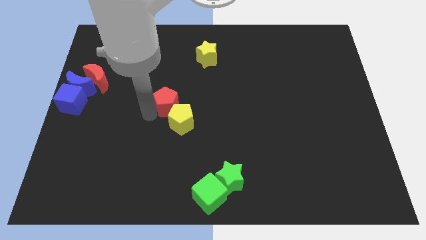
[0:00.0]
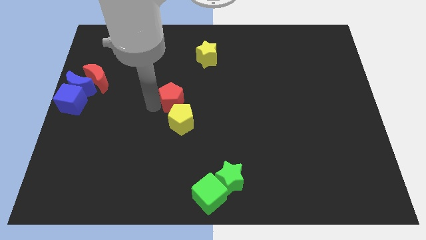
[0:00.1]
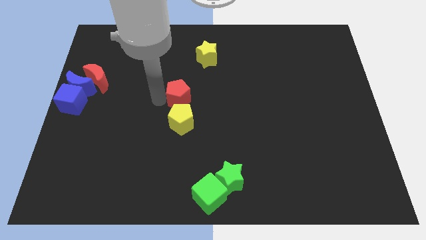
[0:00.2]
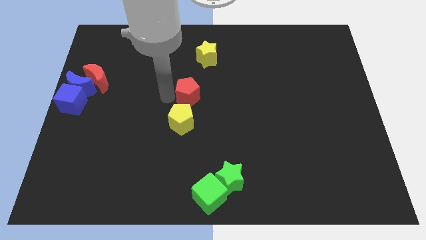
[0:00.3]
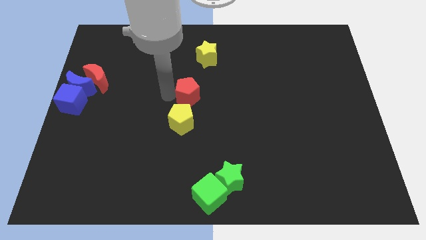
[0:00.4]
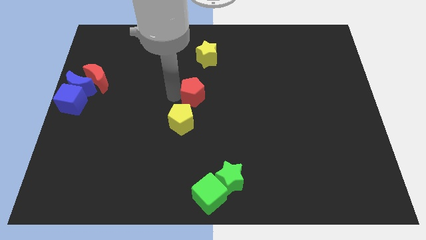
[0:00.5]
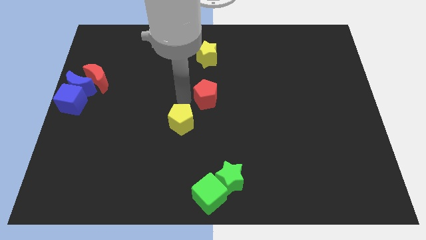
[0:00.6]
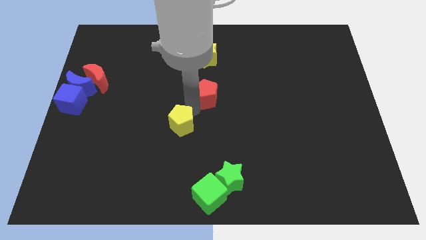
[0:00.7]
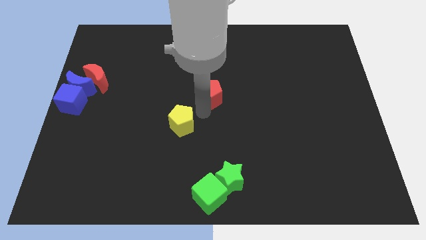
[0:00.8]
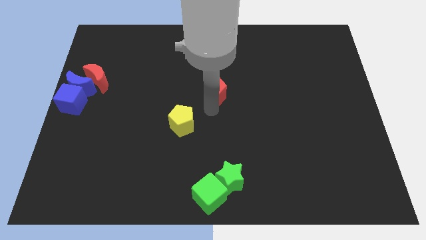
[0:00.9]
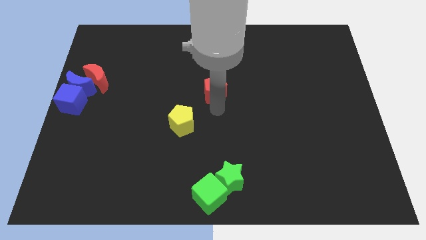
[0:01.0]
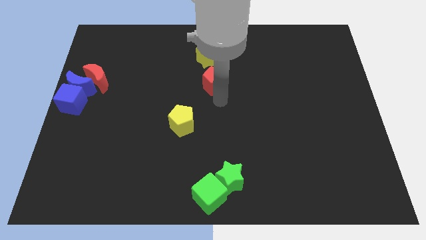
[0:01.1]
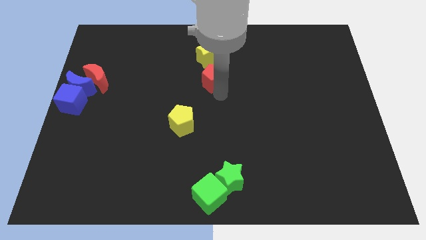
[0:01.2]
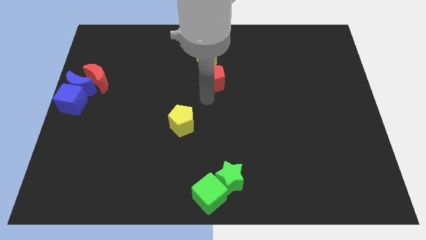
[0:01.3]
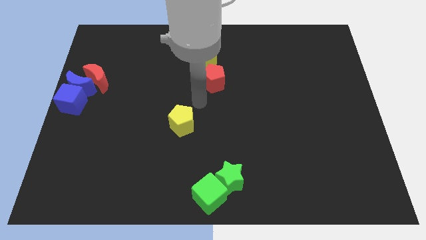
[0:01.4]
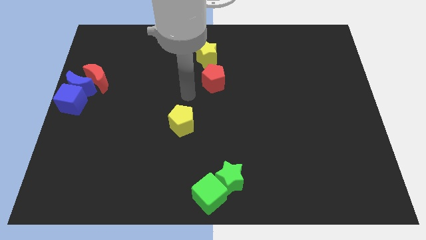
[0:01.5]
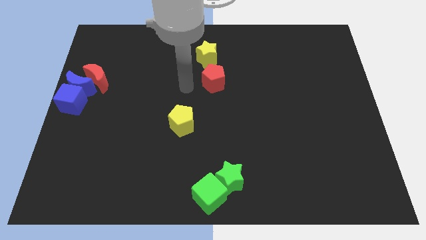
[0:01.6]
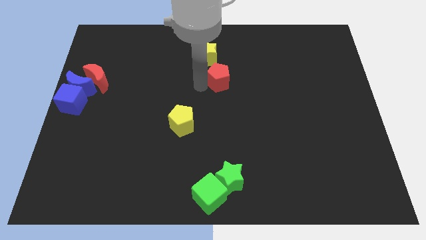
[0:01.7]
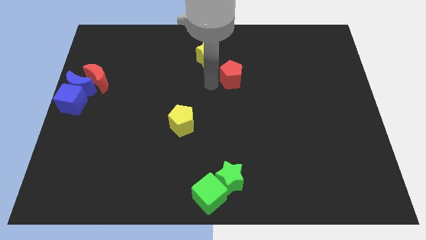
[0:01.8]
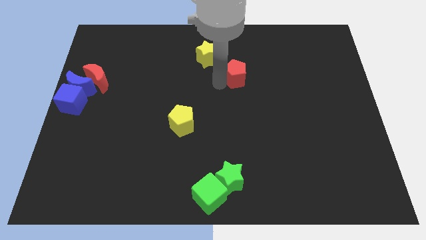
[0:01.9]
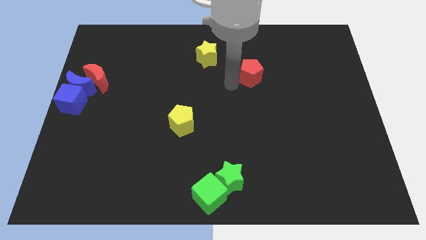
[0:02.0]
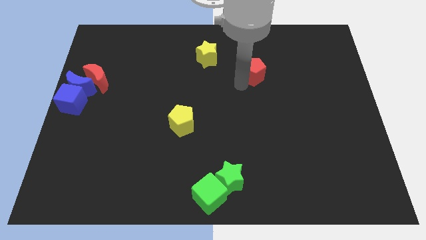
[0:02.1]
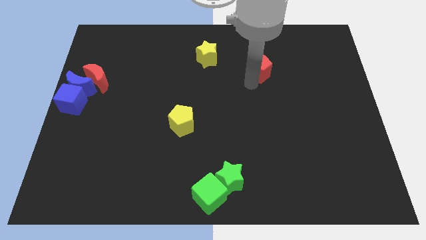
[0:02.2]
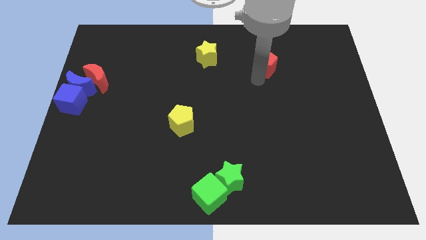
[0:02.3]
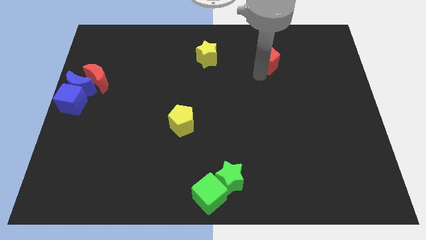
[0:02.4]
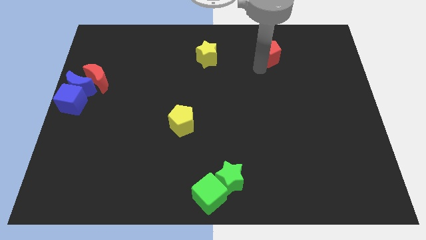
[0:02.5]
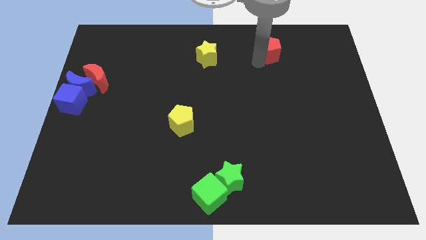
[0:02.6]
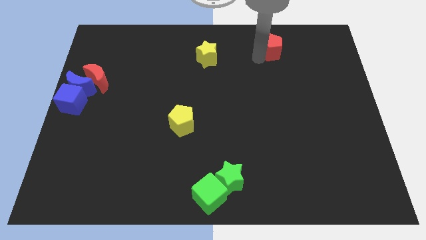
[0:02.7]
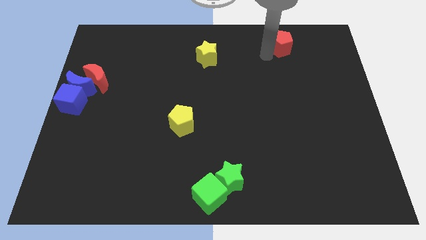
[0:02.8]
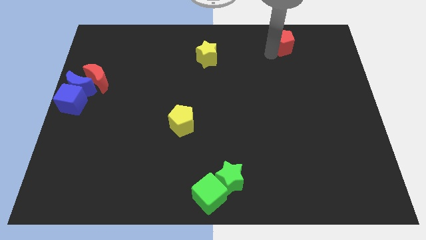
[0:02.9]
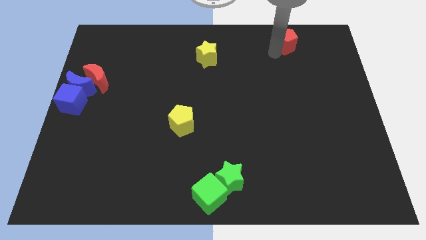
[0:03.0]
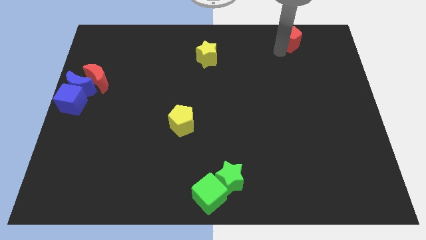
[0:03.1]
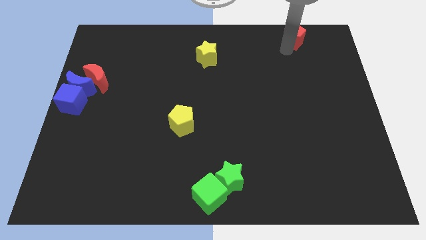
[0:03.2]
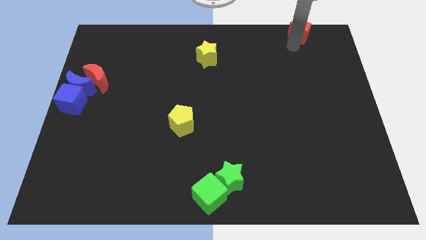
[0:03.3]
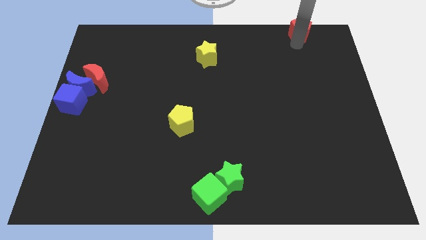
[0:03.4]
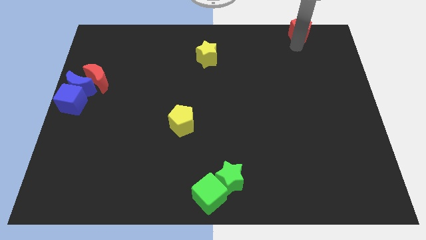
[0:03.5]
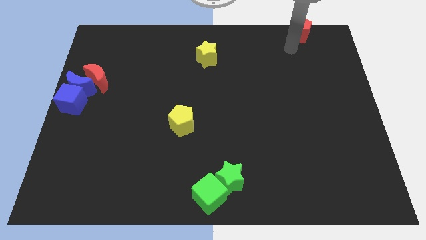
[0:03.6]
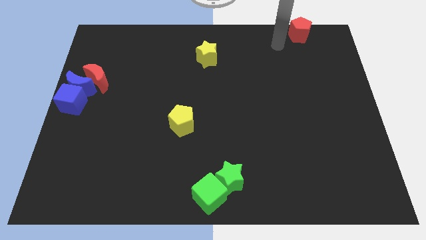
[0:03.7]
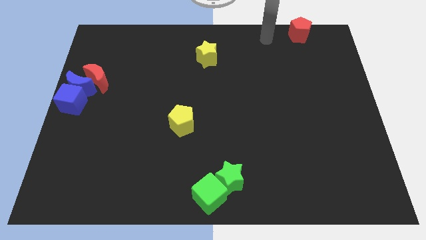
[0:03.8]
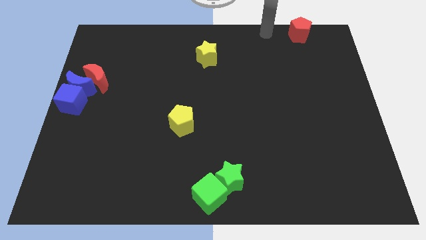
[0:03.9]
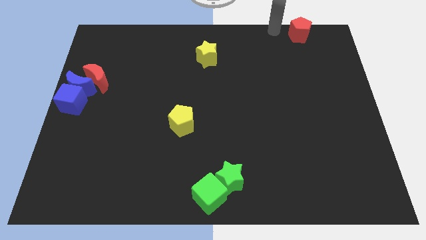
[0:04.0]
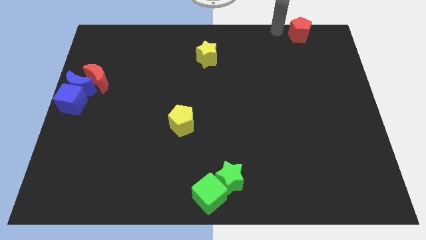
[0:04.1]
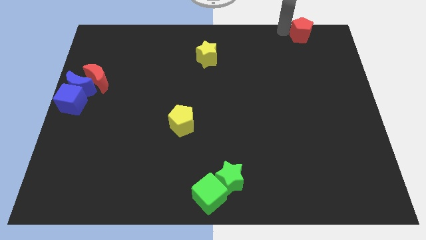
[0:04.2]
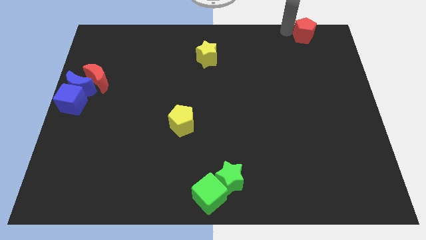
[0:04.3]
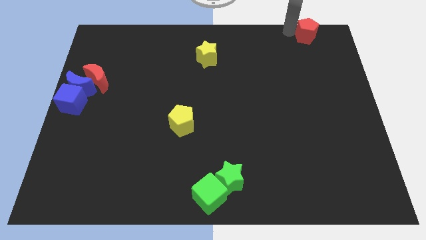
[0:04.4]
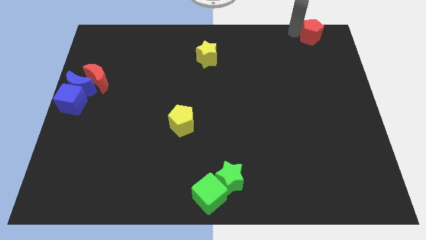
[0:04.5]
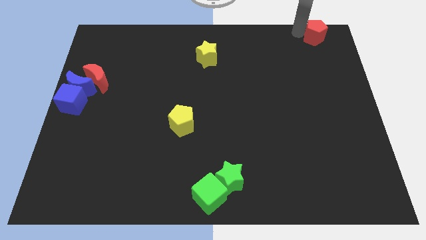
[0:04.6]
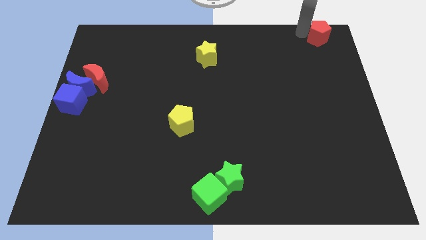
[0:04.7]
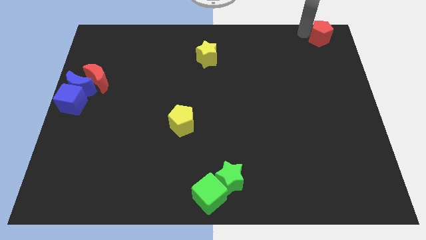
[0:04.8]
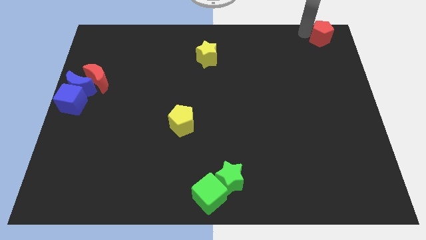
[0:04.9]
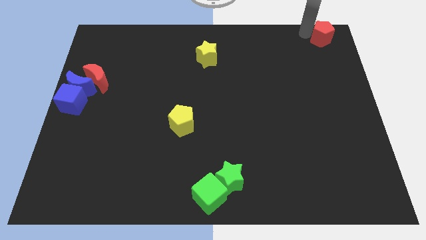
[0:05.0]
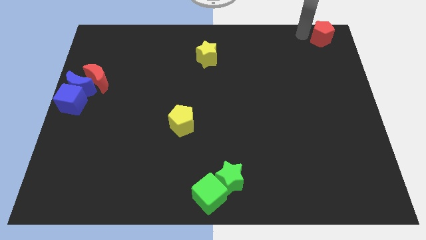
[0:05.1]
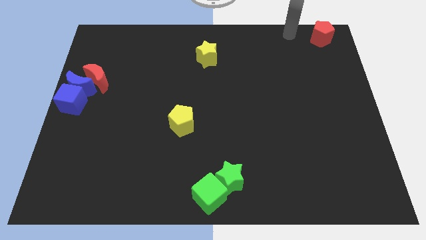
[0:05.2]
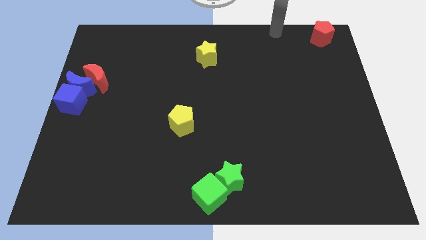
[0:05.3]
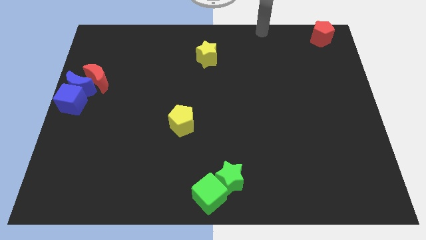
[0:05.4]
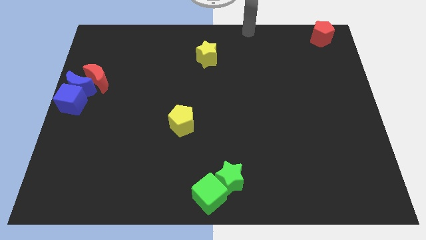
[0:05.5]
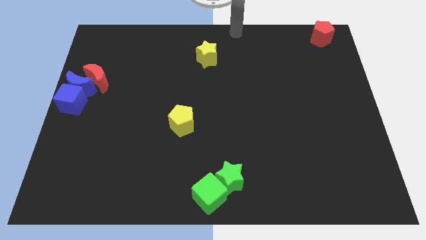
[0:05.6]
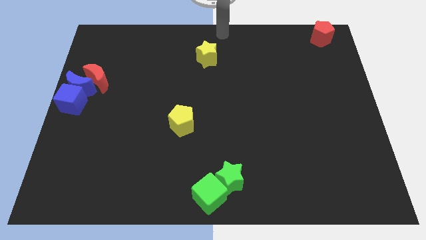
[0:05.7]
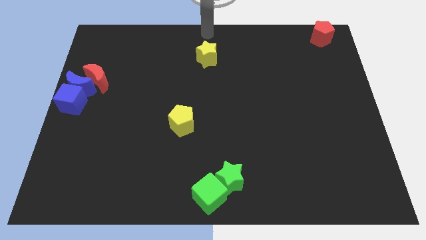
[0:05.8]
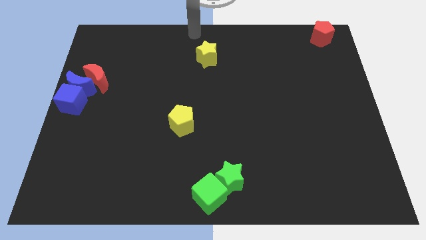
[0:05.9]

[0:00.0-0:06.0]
move the red pentagon to the top right on the board

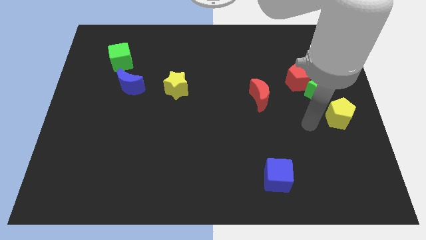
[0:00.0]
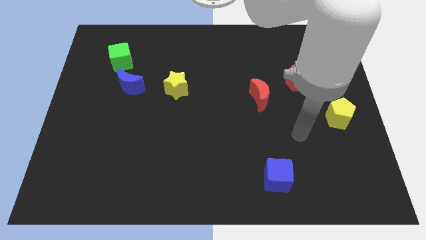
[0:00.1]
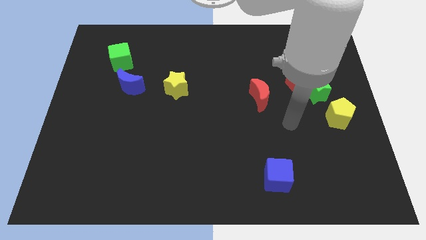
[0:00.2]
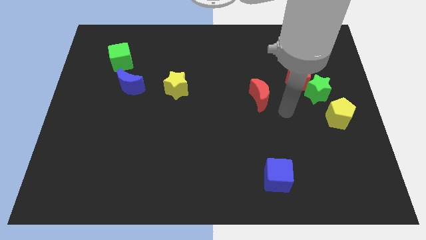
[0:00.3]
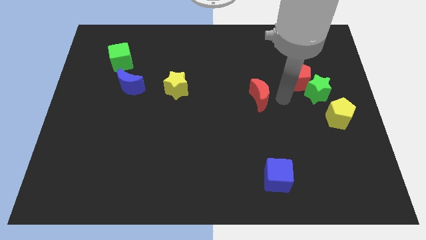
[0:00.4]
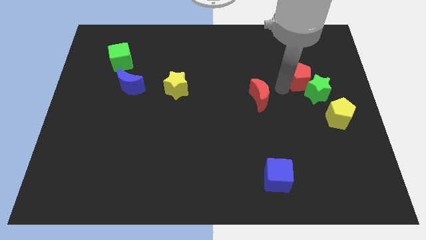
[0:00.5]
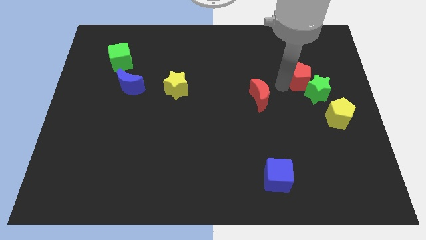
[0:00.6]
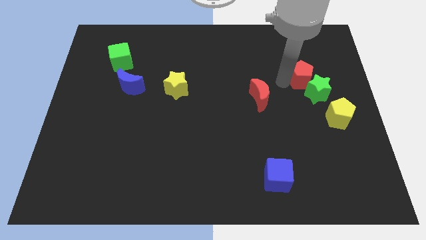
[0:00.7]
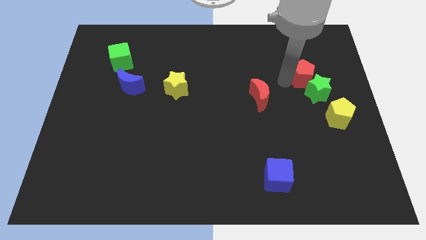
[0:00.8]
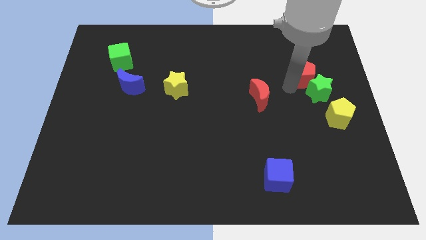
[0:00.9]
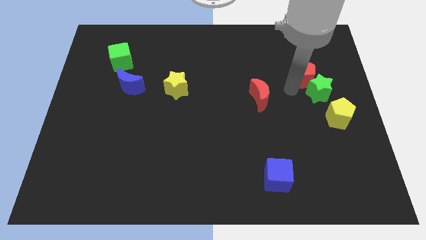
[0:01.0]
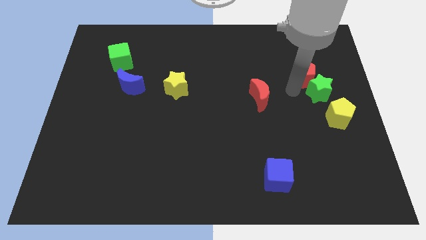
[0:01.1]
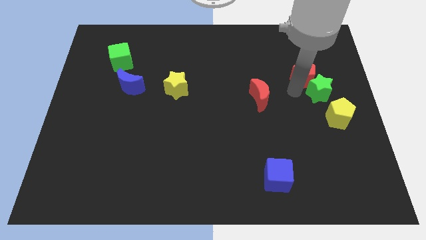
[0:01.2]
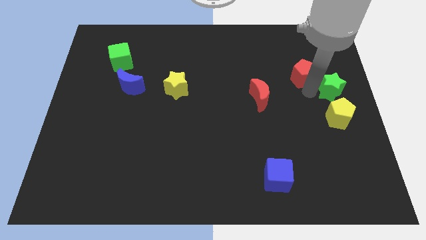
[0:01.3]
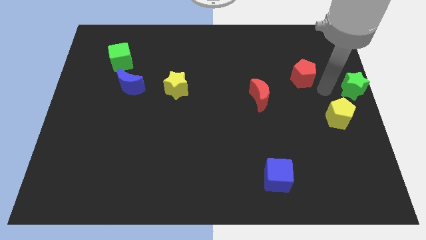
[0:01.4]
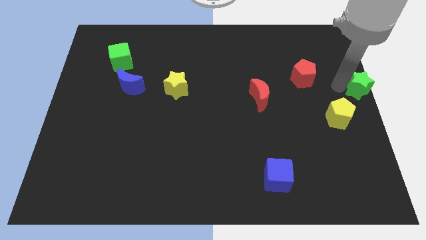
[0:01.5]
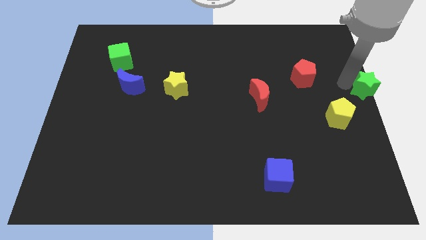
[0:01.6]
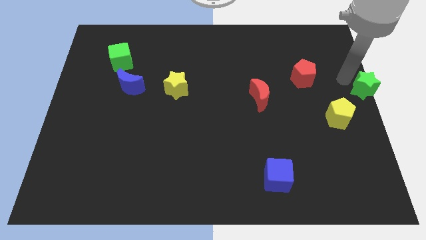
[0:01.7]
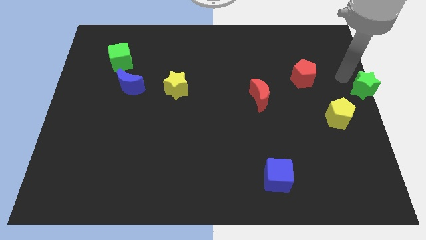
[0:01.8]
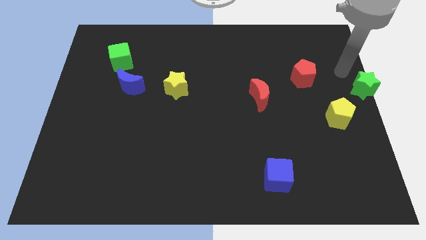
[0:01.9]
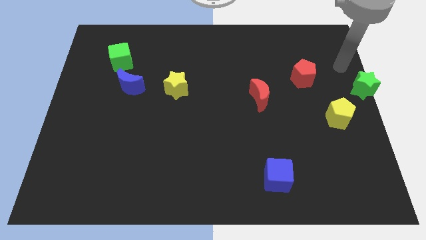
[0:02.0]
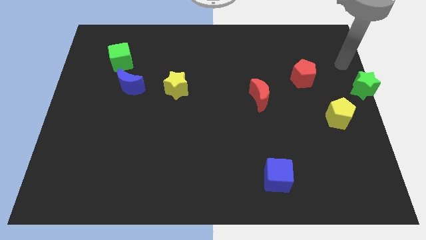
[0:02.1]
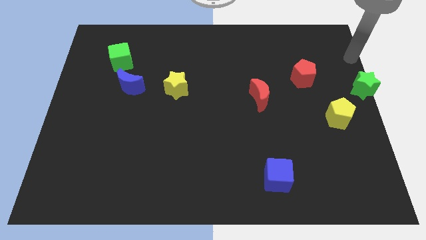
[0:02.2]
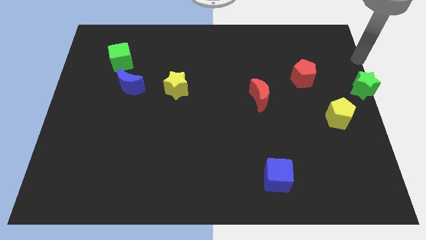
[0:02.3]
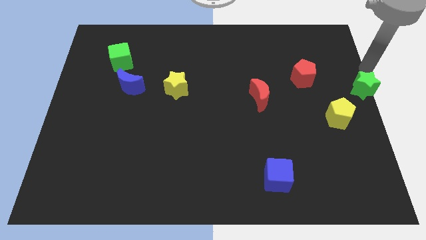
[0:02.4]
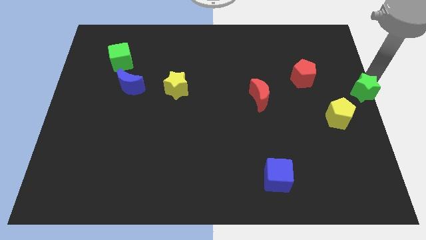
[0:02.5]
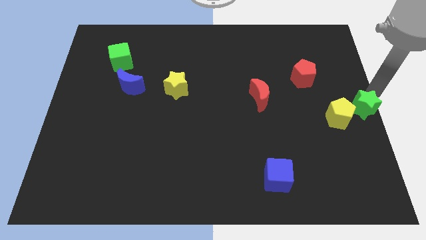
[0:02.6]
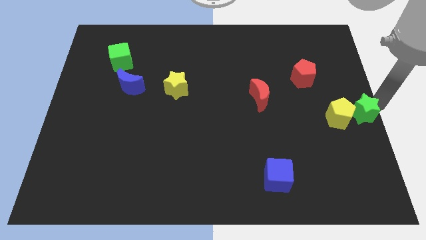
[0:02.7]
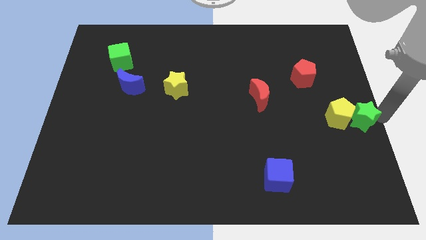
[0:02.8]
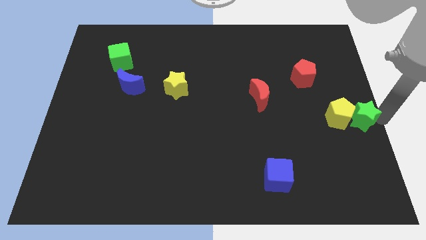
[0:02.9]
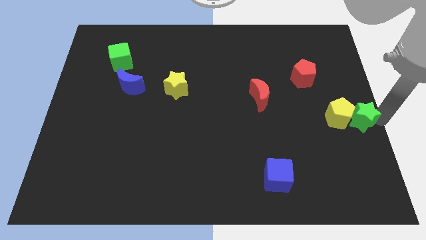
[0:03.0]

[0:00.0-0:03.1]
place the green star to the right side of yellow pentagon
